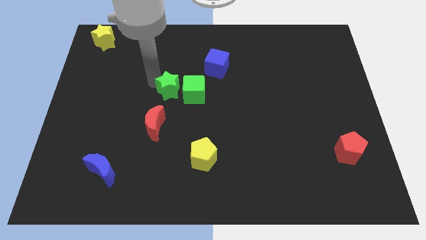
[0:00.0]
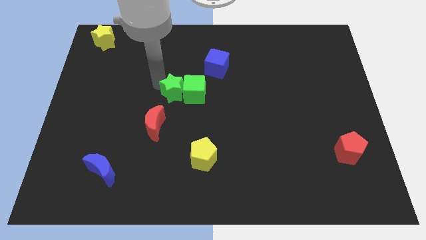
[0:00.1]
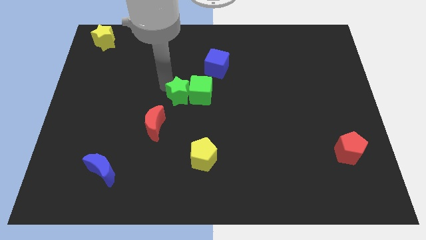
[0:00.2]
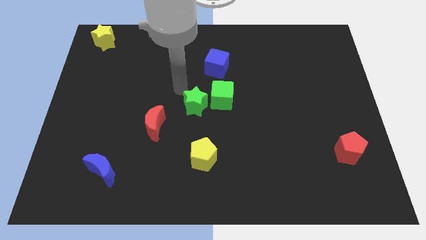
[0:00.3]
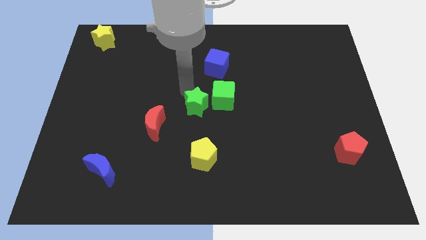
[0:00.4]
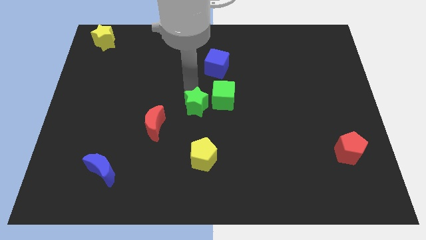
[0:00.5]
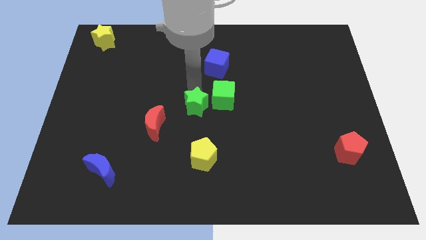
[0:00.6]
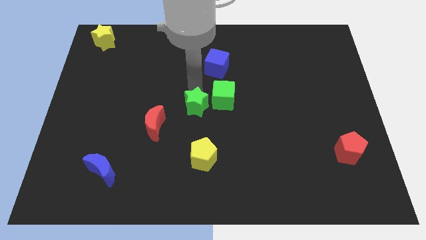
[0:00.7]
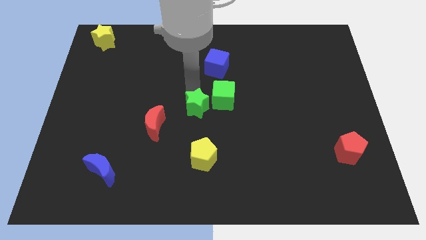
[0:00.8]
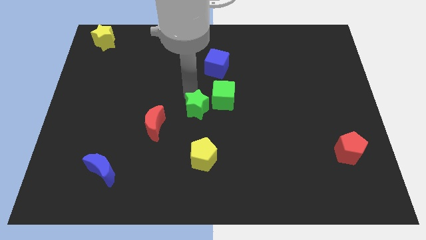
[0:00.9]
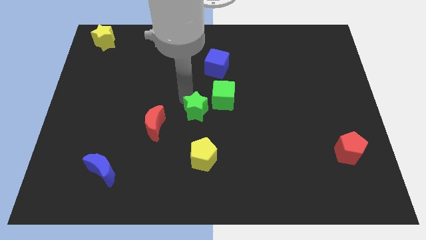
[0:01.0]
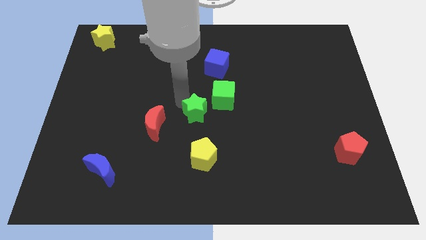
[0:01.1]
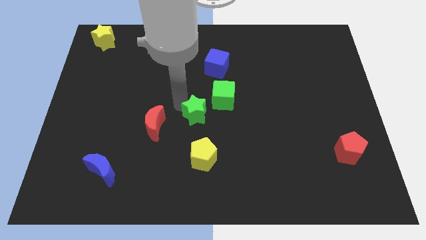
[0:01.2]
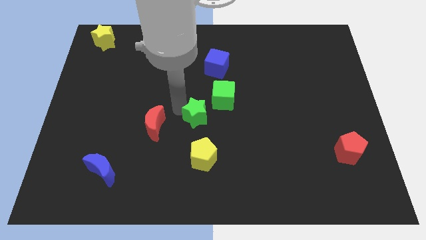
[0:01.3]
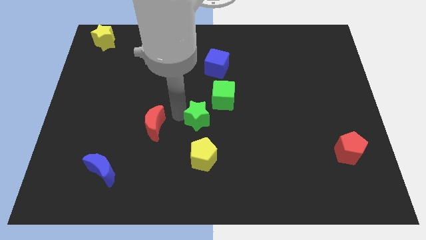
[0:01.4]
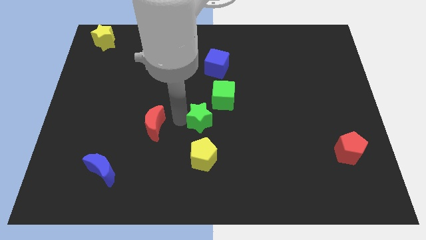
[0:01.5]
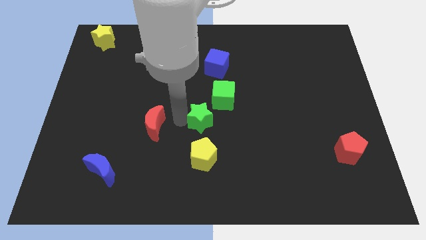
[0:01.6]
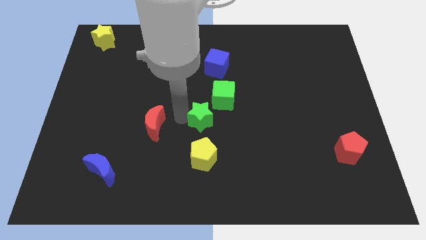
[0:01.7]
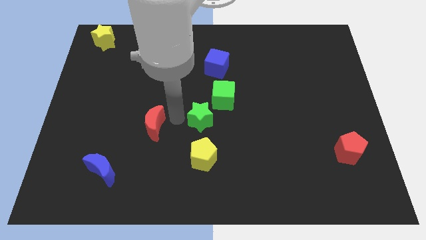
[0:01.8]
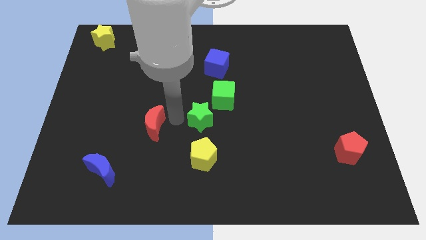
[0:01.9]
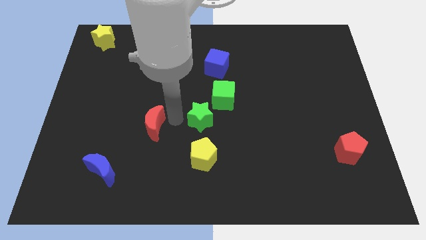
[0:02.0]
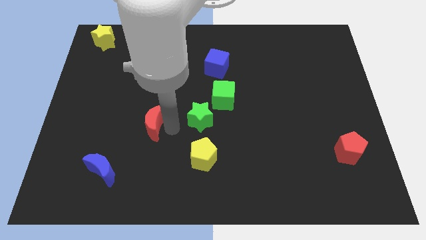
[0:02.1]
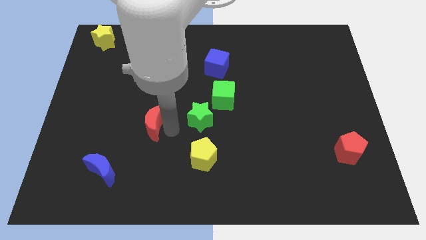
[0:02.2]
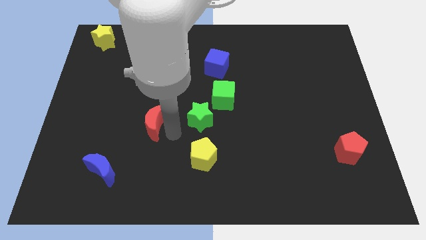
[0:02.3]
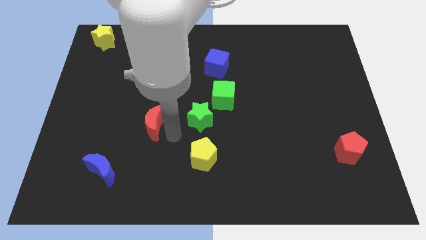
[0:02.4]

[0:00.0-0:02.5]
place green star to the right of red moon

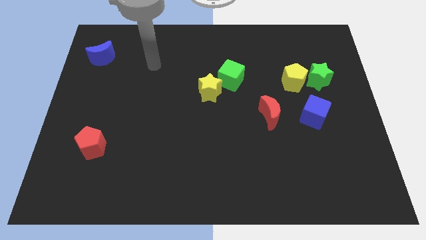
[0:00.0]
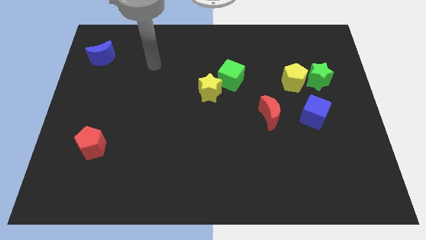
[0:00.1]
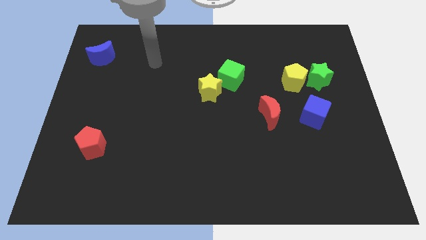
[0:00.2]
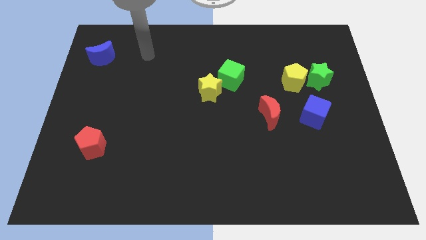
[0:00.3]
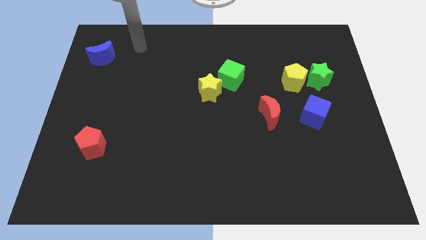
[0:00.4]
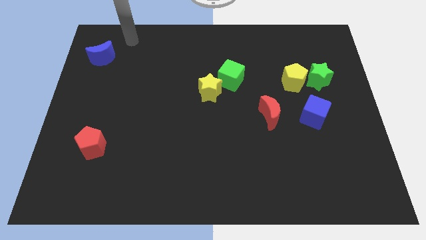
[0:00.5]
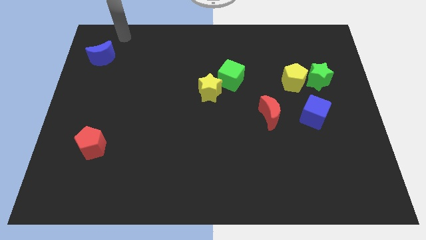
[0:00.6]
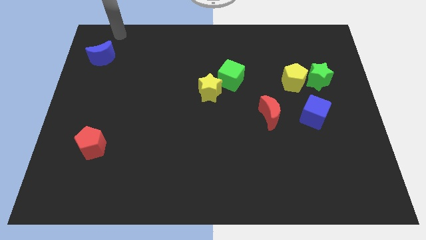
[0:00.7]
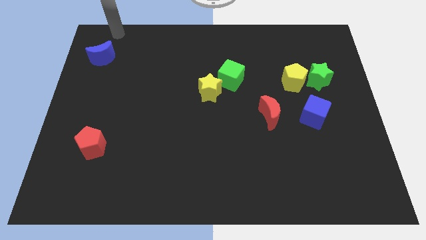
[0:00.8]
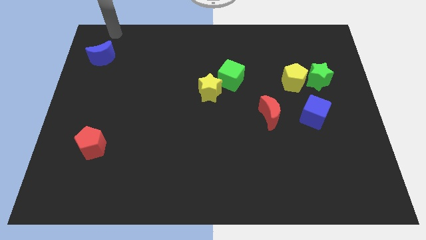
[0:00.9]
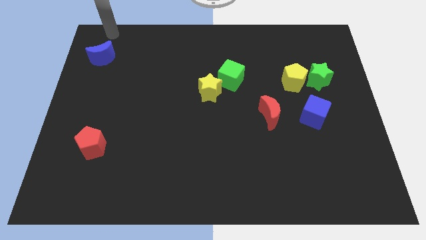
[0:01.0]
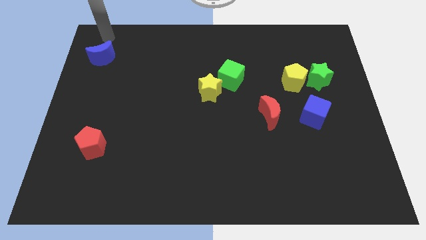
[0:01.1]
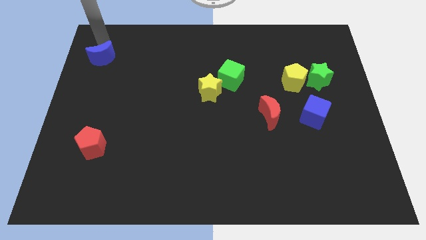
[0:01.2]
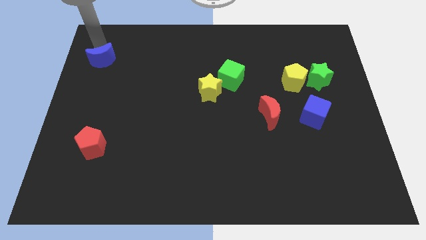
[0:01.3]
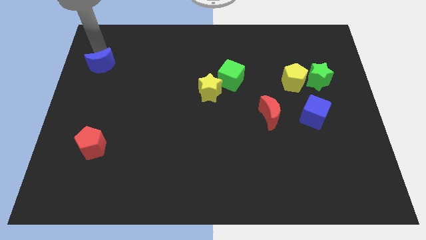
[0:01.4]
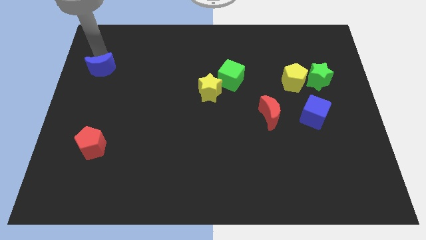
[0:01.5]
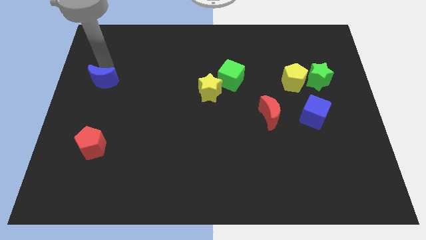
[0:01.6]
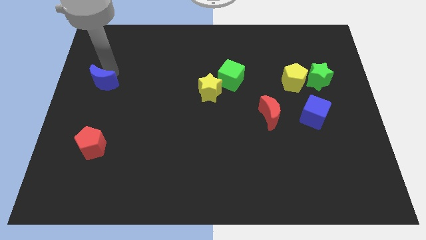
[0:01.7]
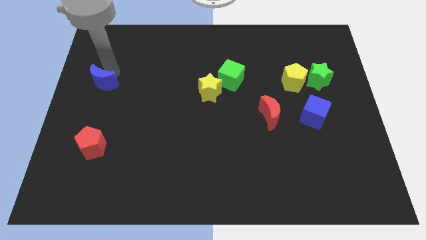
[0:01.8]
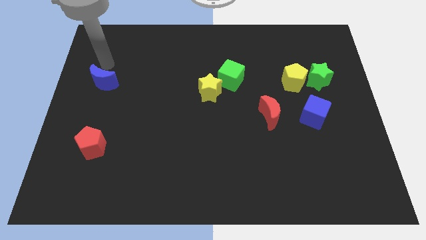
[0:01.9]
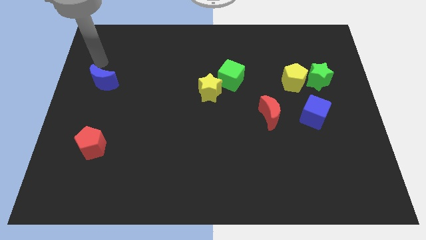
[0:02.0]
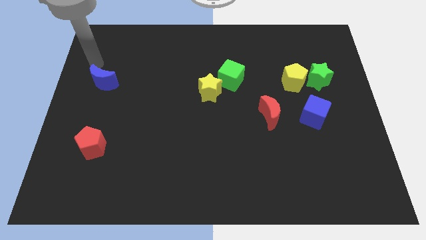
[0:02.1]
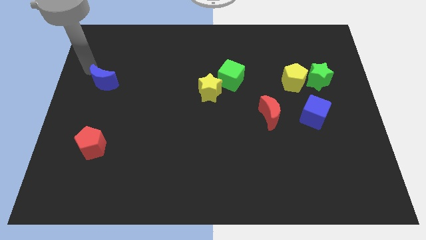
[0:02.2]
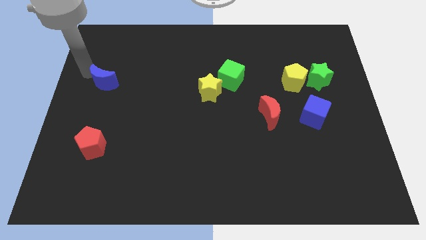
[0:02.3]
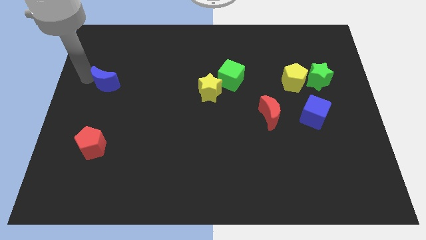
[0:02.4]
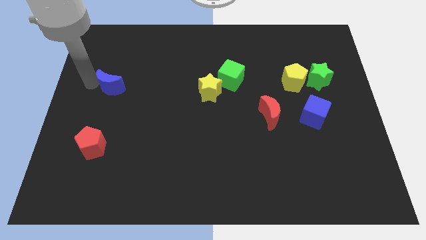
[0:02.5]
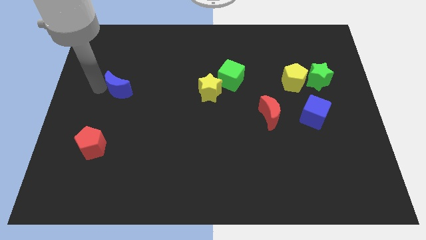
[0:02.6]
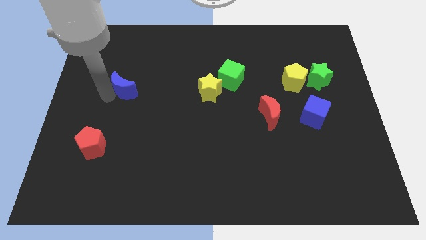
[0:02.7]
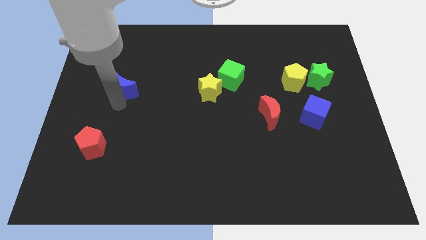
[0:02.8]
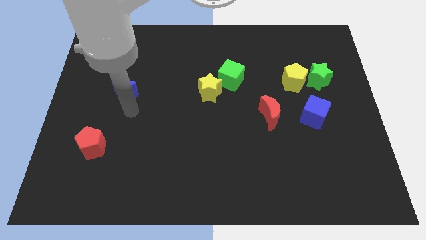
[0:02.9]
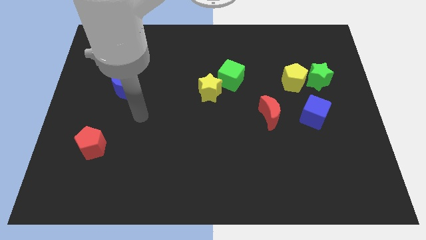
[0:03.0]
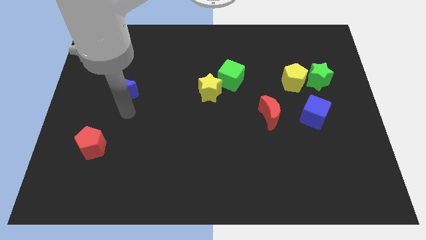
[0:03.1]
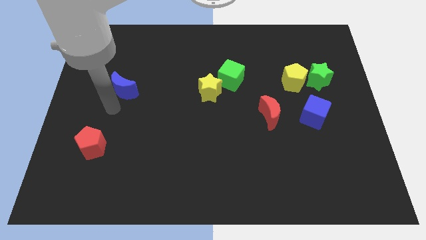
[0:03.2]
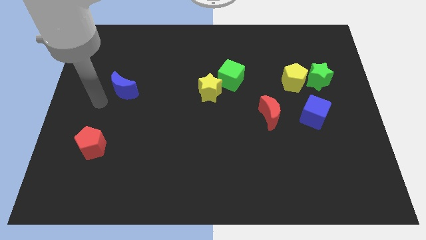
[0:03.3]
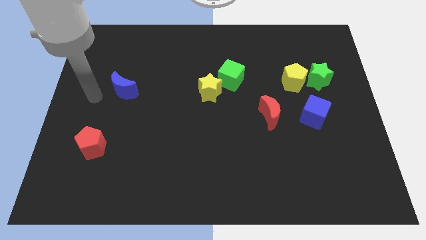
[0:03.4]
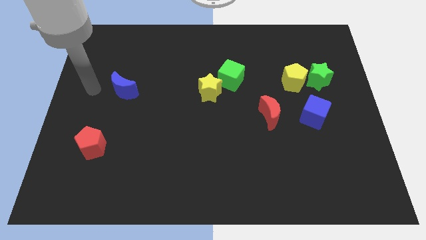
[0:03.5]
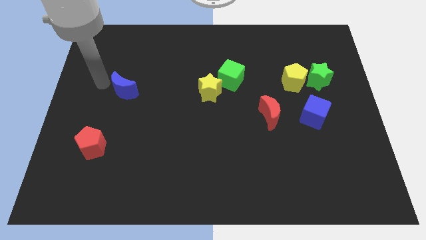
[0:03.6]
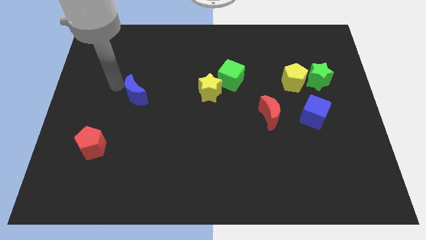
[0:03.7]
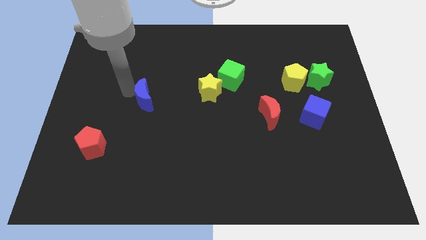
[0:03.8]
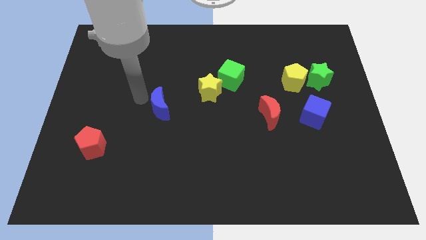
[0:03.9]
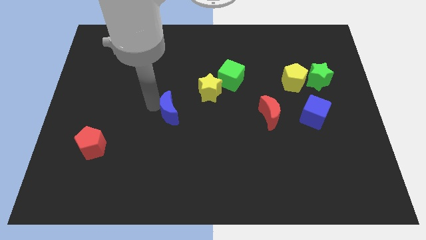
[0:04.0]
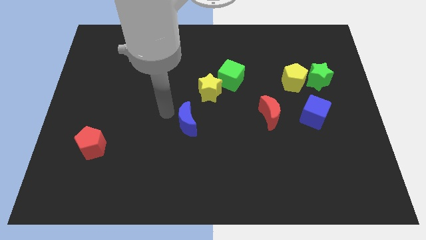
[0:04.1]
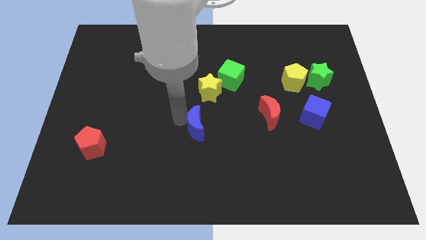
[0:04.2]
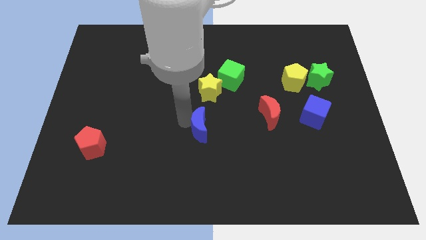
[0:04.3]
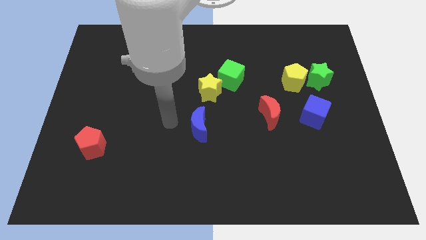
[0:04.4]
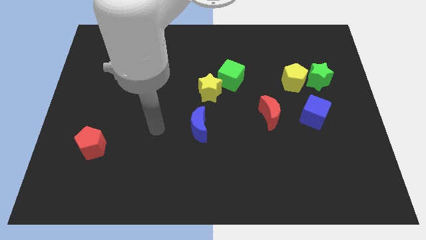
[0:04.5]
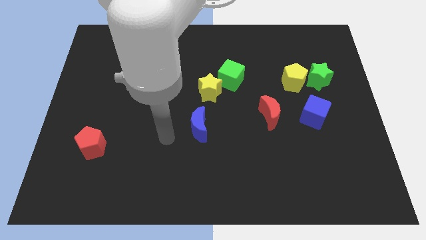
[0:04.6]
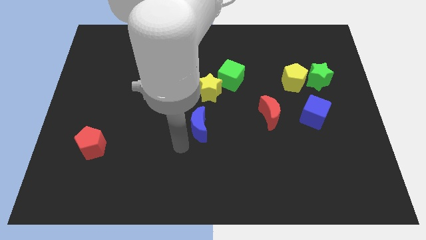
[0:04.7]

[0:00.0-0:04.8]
push the blue crescent to the center of the board

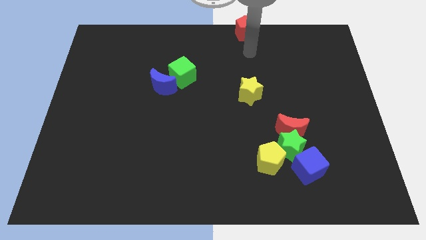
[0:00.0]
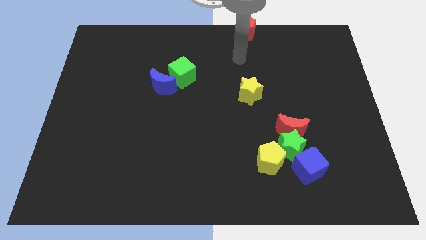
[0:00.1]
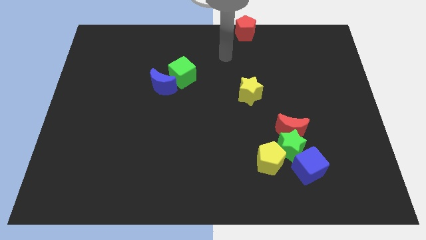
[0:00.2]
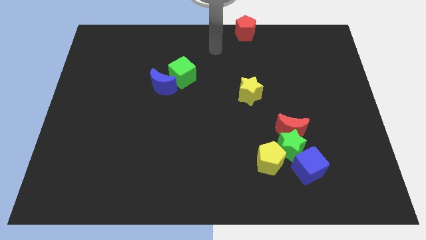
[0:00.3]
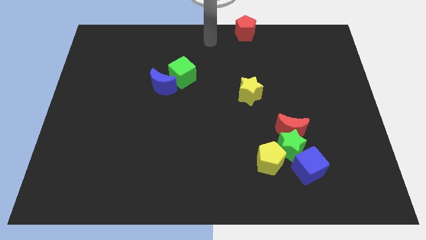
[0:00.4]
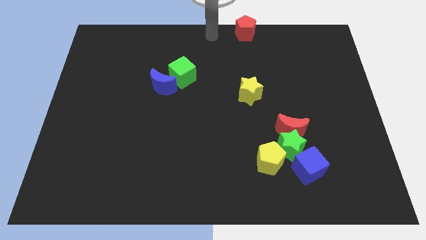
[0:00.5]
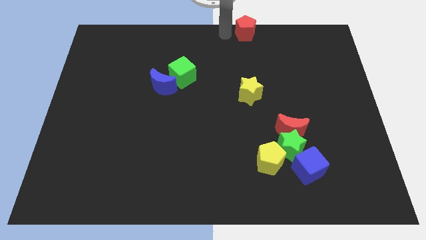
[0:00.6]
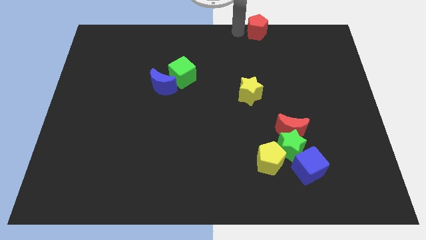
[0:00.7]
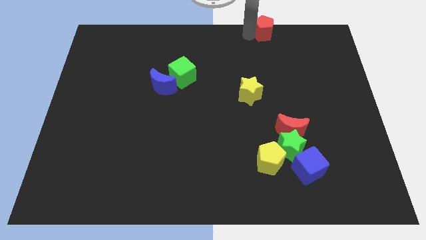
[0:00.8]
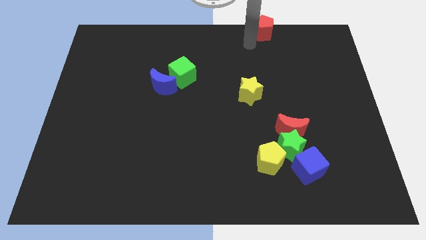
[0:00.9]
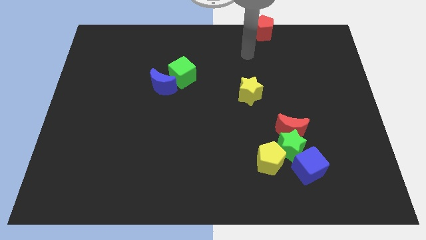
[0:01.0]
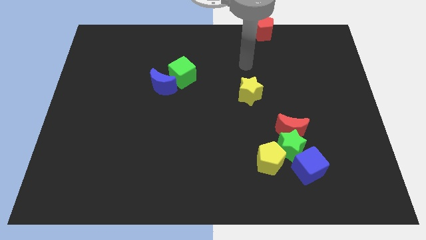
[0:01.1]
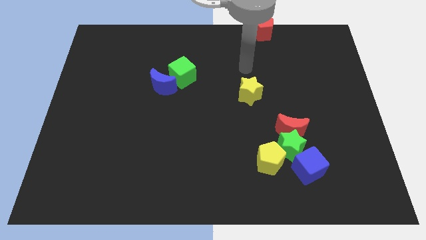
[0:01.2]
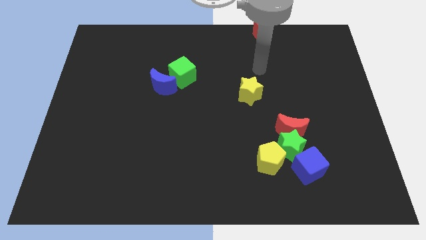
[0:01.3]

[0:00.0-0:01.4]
slide the red pentagon slightly to the right

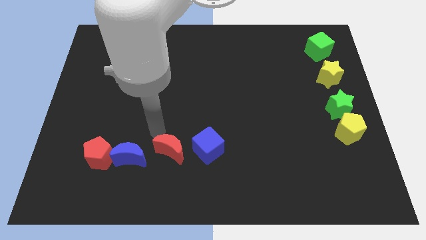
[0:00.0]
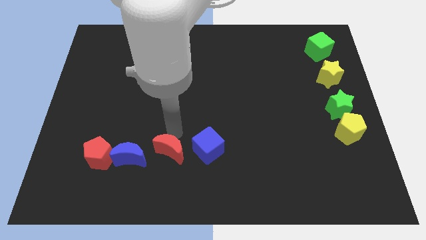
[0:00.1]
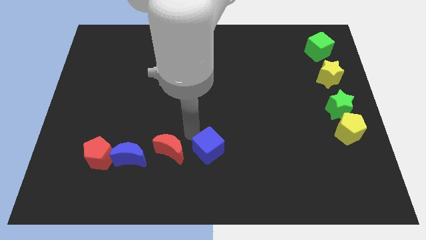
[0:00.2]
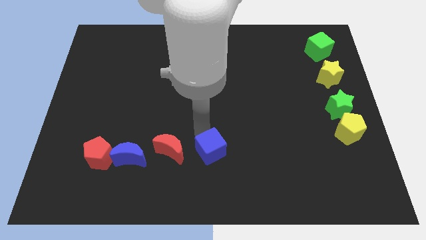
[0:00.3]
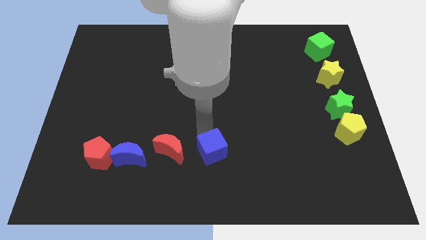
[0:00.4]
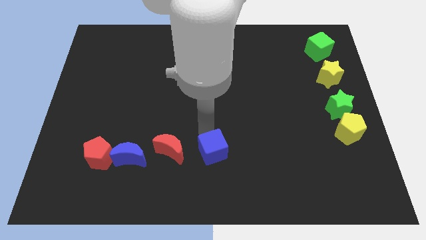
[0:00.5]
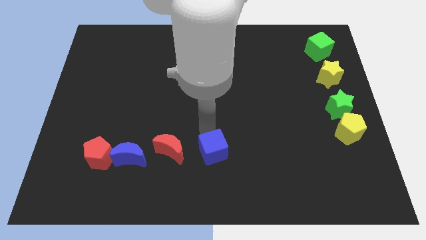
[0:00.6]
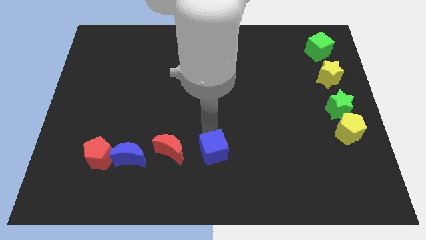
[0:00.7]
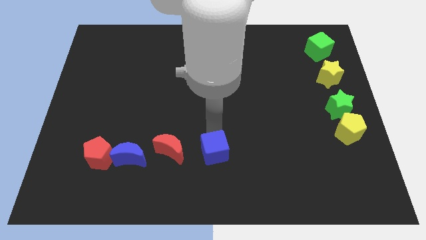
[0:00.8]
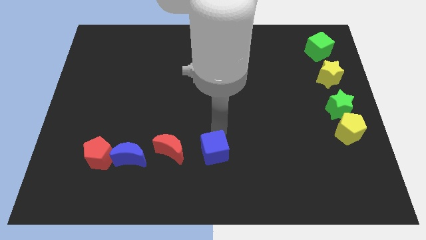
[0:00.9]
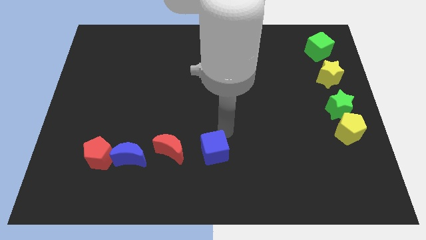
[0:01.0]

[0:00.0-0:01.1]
move the blue cube slightly to the bottom of the board
